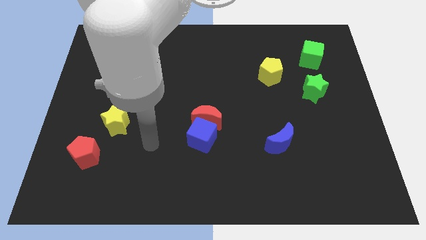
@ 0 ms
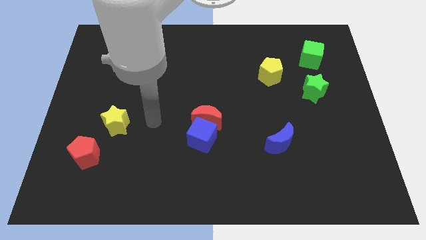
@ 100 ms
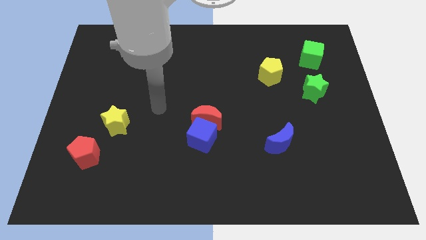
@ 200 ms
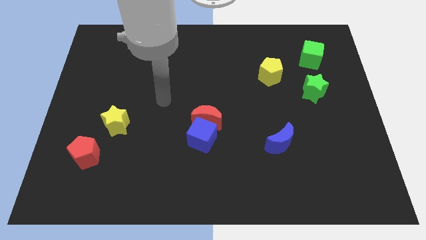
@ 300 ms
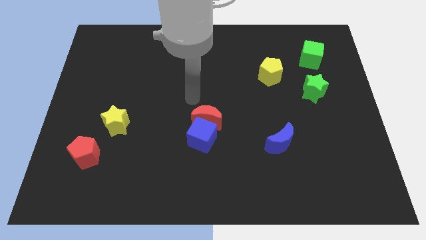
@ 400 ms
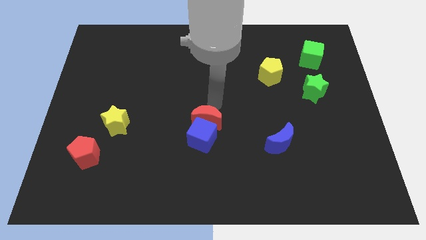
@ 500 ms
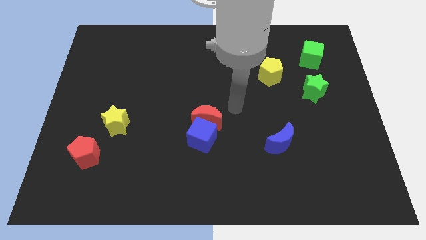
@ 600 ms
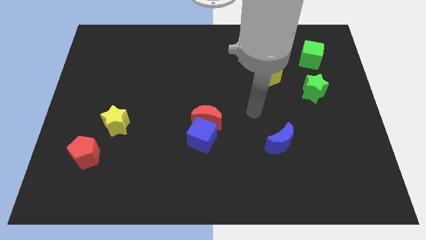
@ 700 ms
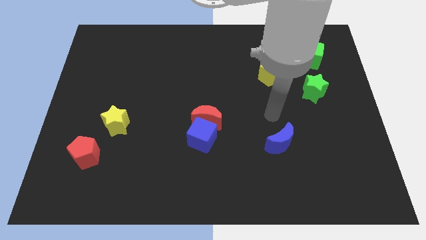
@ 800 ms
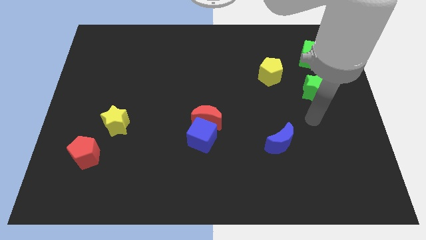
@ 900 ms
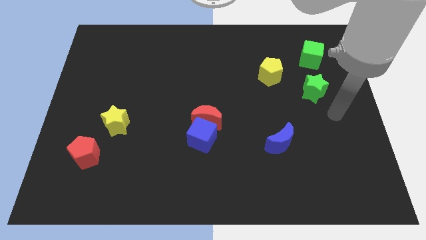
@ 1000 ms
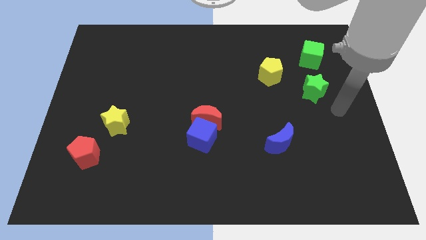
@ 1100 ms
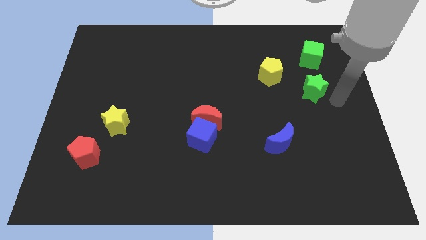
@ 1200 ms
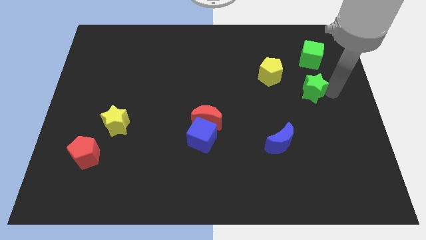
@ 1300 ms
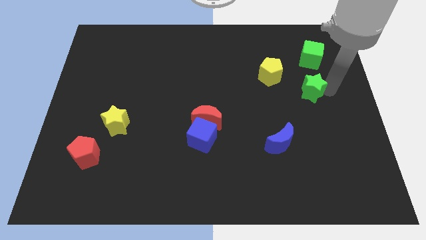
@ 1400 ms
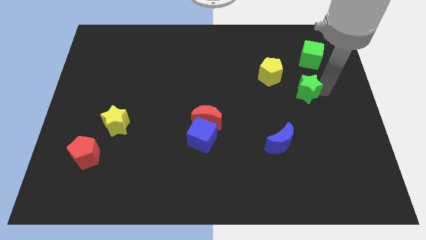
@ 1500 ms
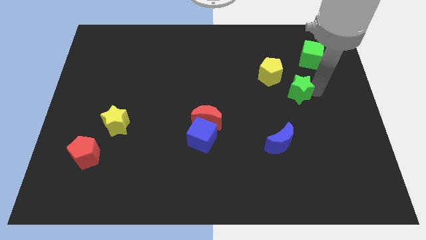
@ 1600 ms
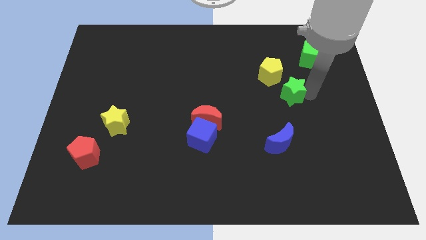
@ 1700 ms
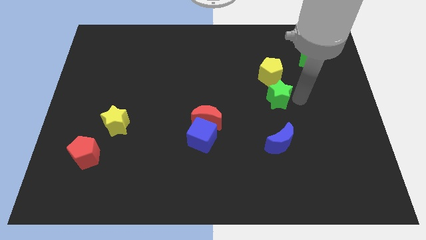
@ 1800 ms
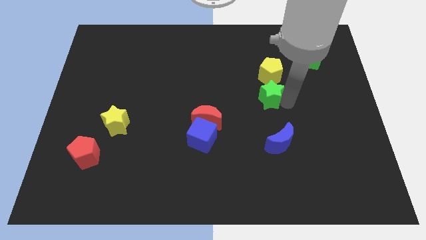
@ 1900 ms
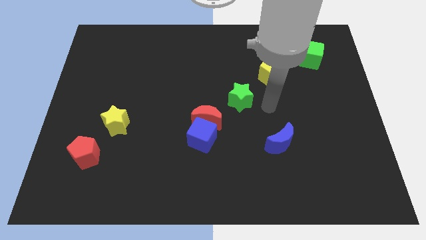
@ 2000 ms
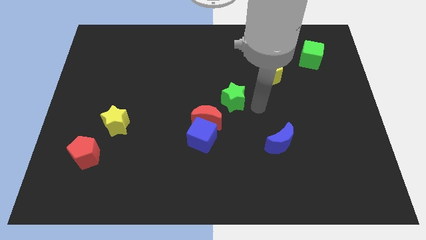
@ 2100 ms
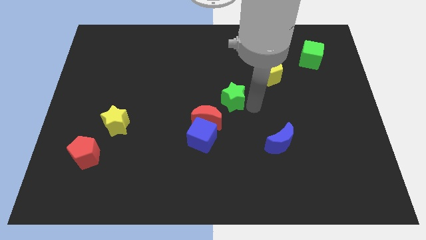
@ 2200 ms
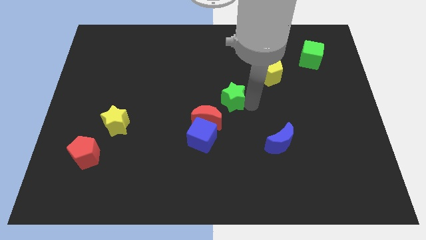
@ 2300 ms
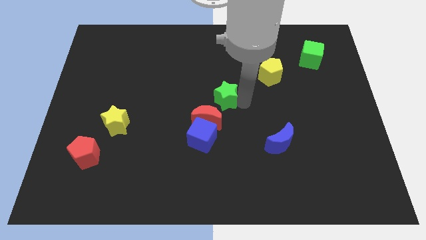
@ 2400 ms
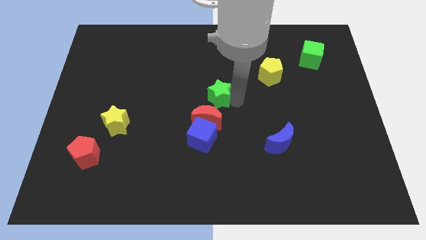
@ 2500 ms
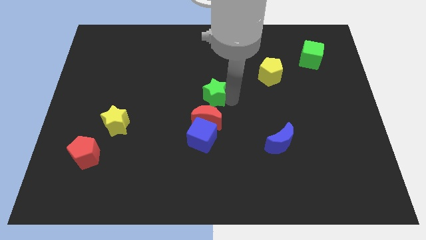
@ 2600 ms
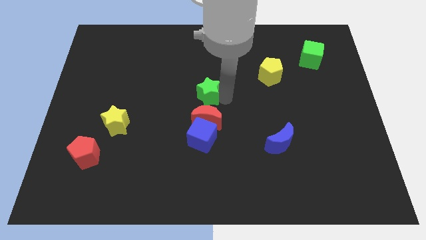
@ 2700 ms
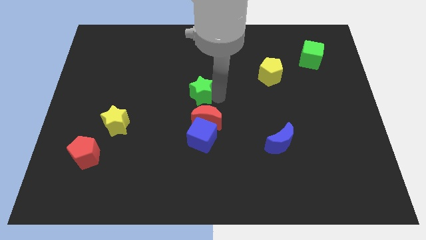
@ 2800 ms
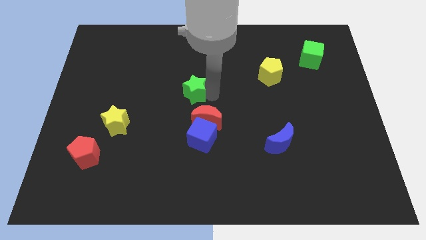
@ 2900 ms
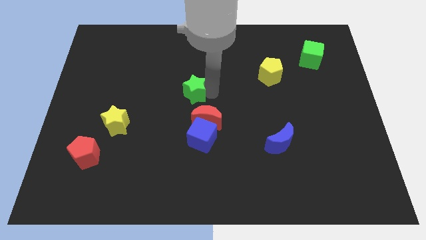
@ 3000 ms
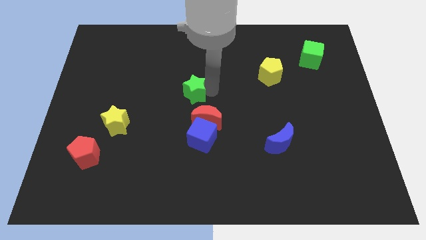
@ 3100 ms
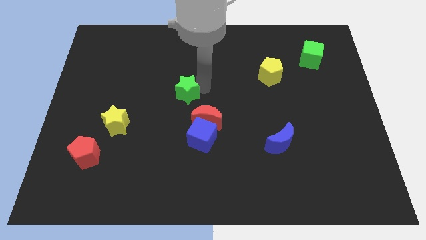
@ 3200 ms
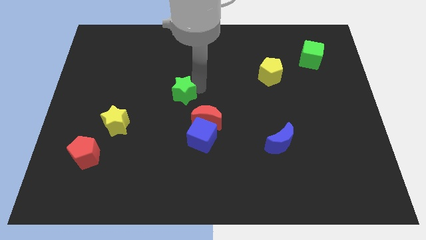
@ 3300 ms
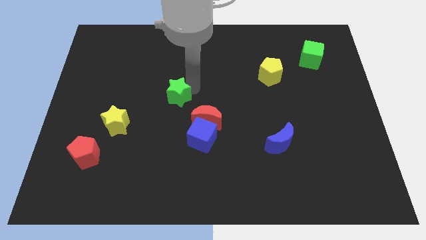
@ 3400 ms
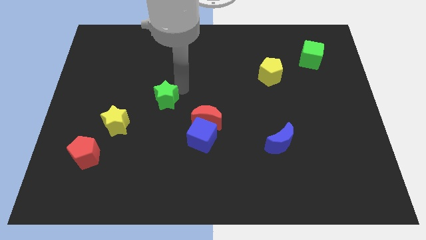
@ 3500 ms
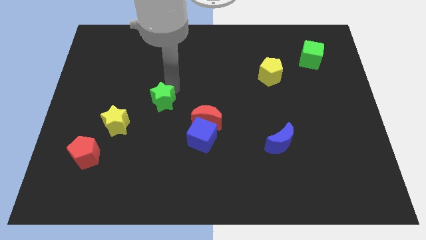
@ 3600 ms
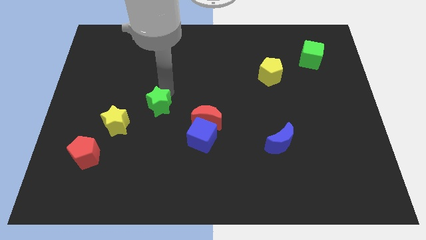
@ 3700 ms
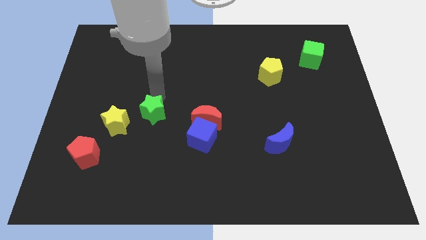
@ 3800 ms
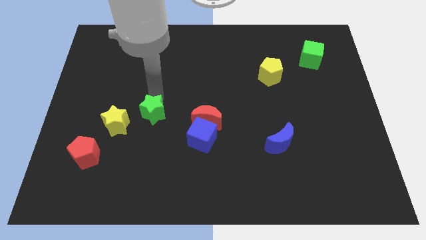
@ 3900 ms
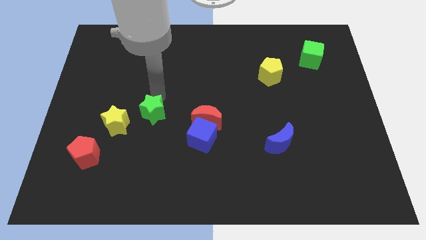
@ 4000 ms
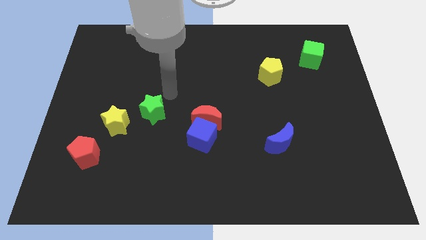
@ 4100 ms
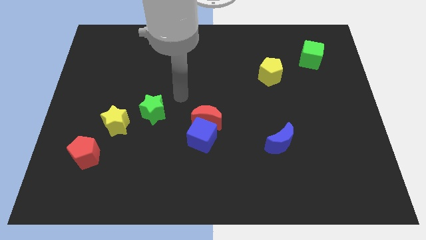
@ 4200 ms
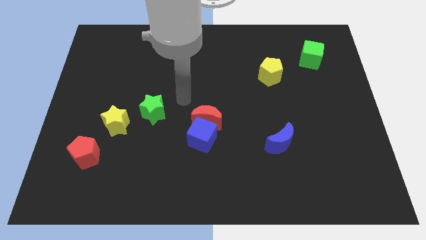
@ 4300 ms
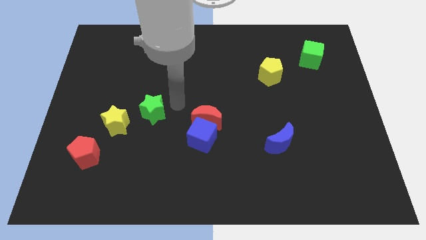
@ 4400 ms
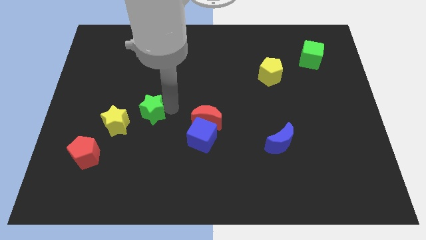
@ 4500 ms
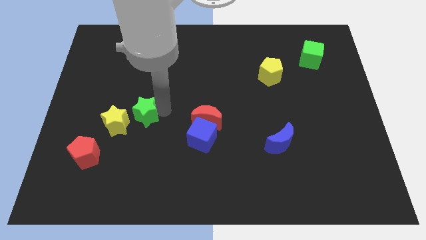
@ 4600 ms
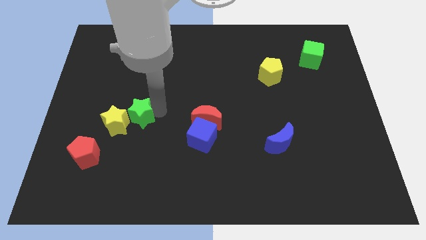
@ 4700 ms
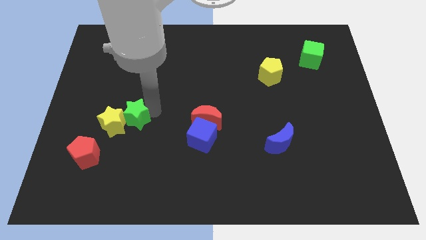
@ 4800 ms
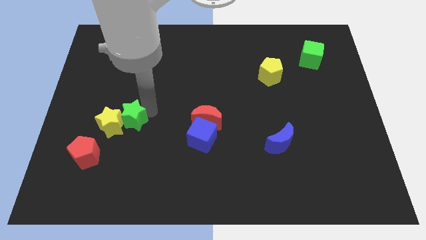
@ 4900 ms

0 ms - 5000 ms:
slide the green star next to the yellow star

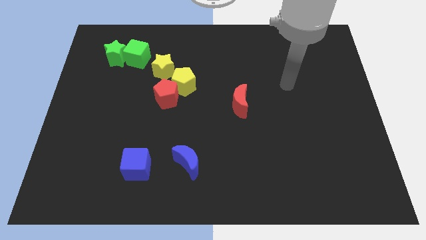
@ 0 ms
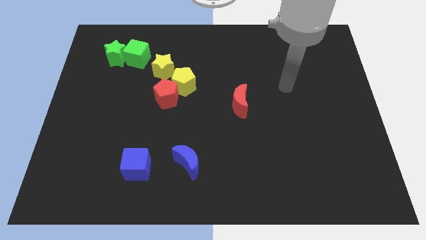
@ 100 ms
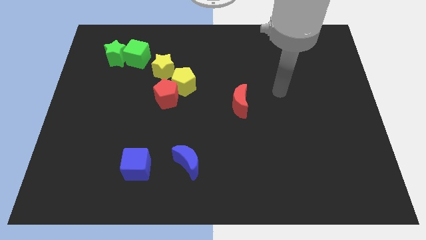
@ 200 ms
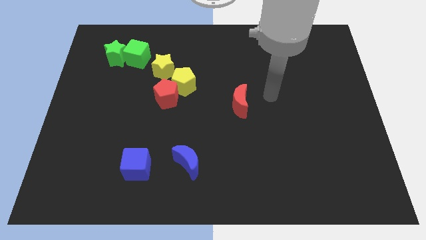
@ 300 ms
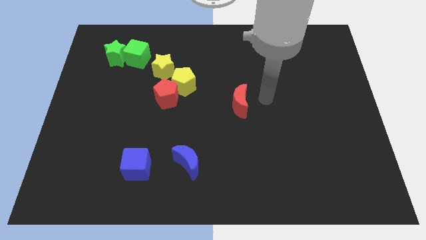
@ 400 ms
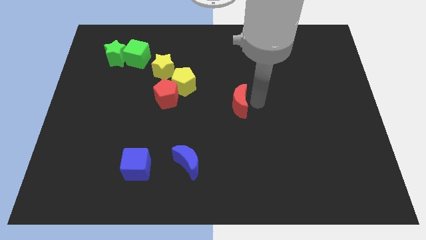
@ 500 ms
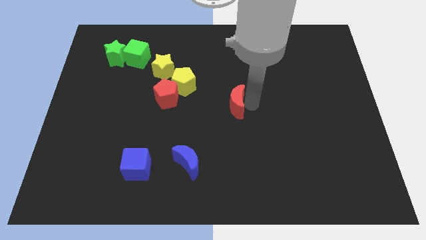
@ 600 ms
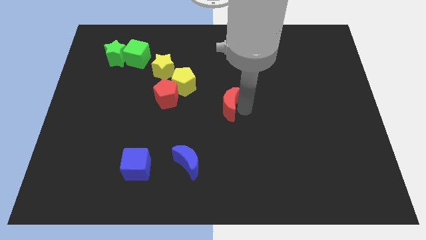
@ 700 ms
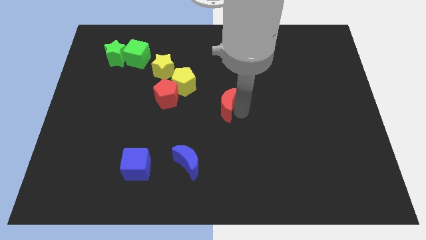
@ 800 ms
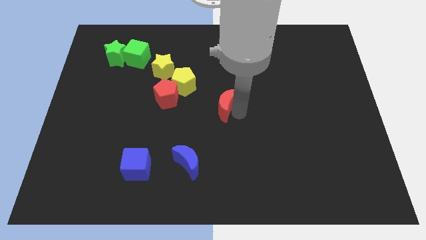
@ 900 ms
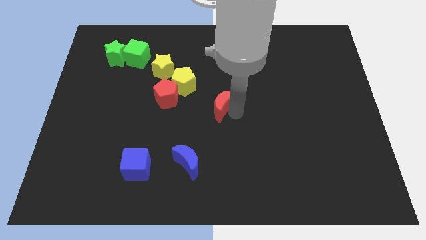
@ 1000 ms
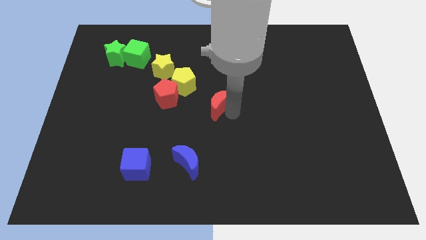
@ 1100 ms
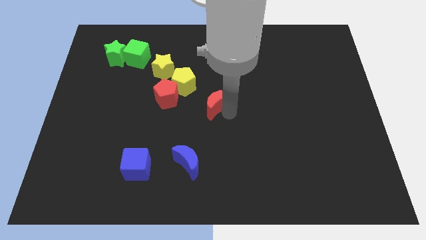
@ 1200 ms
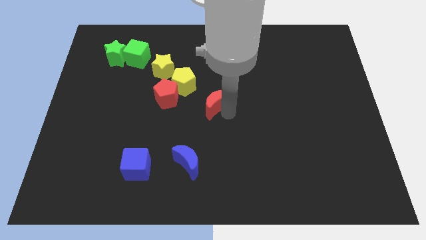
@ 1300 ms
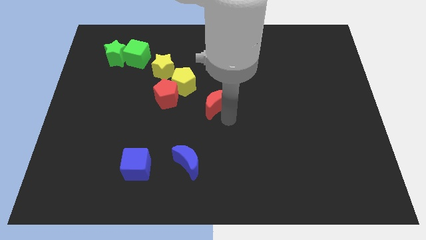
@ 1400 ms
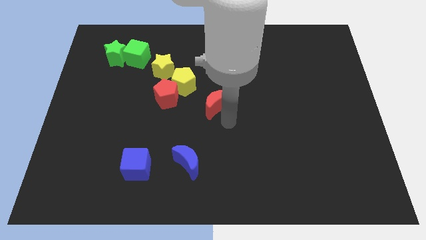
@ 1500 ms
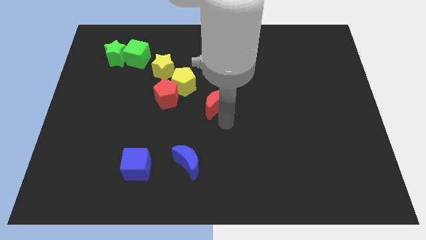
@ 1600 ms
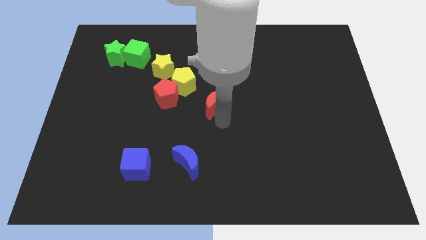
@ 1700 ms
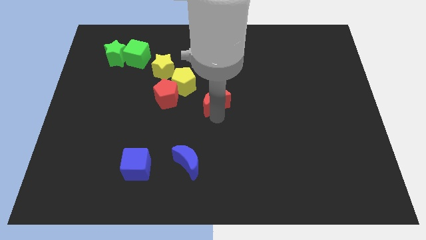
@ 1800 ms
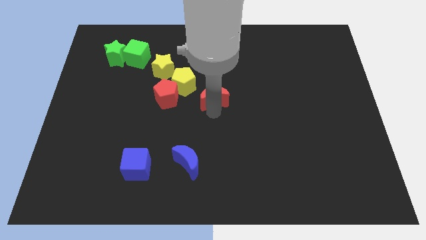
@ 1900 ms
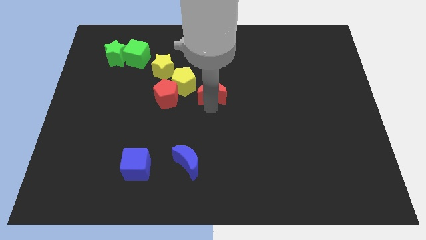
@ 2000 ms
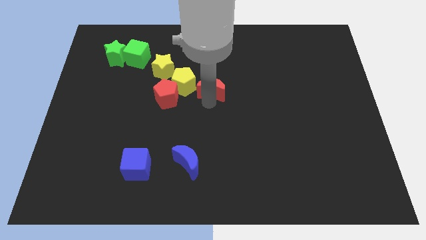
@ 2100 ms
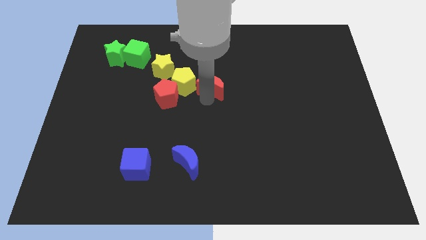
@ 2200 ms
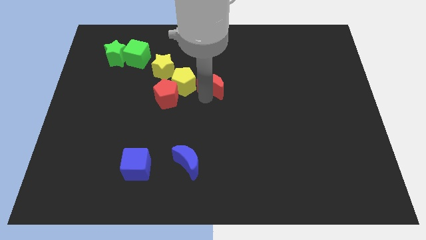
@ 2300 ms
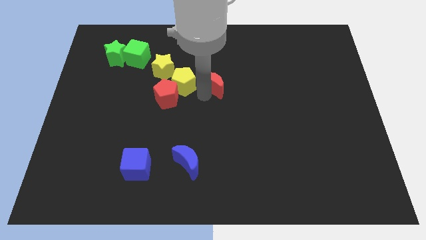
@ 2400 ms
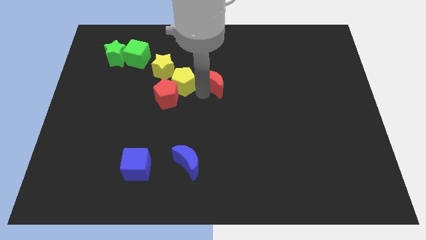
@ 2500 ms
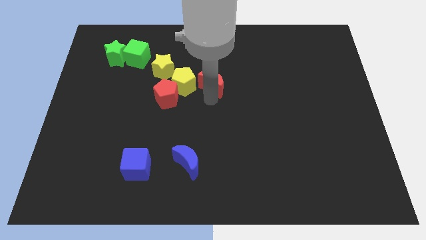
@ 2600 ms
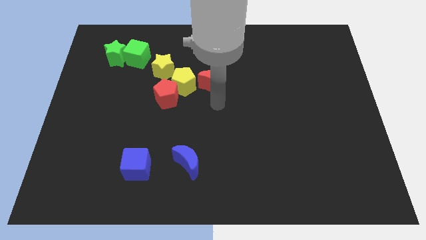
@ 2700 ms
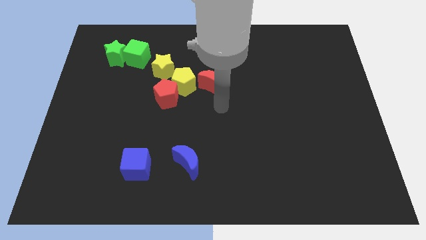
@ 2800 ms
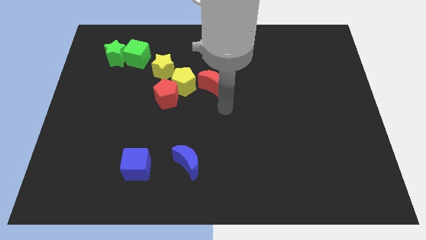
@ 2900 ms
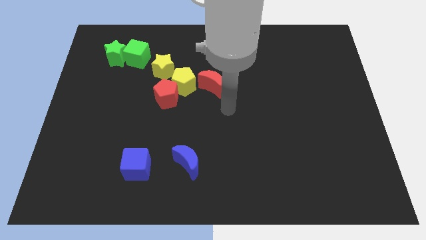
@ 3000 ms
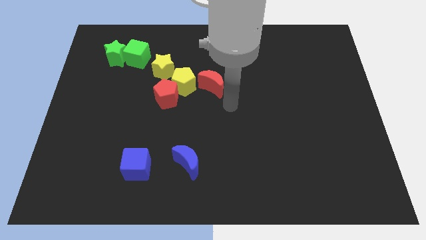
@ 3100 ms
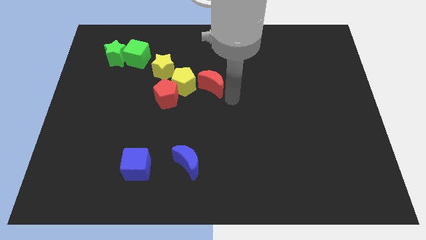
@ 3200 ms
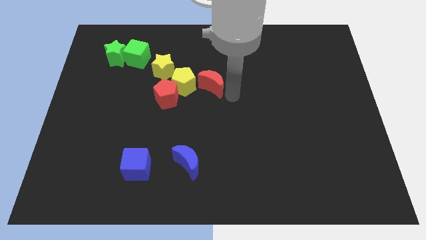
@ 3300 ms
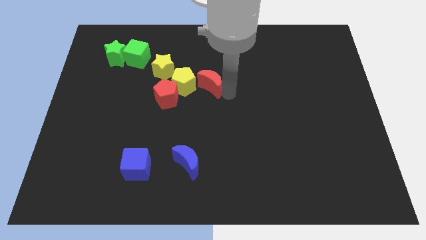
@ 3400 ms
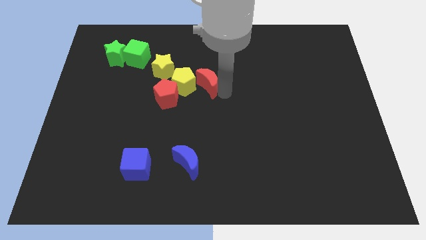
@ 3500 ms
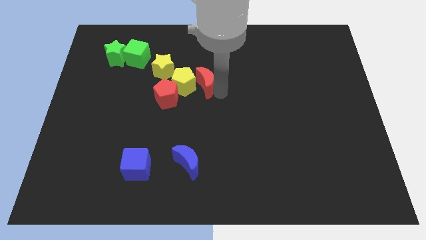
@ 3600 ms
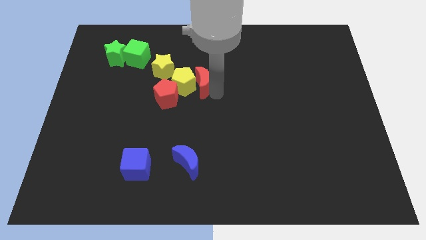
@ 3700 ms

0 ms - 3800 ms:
push the red moon to the yellow pentagon
